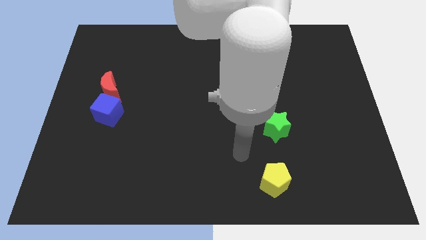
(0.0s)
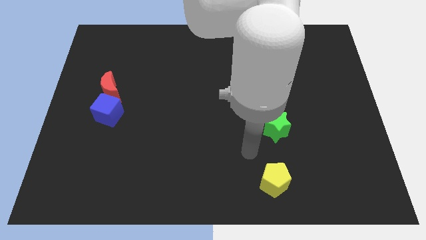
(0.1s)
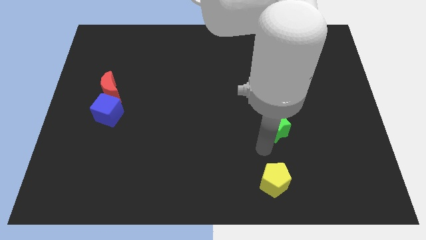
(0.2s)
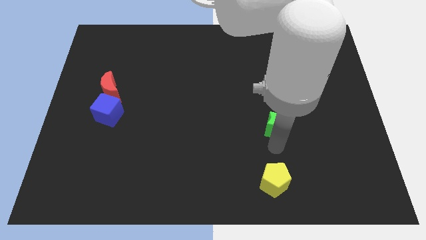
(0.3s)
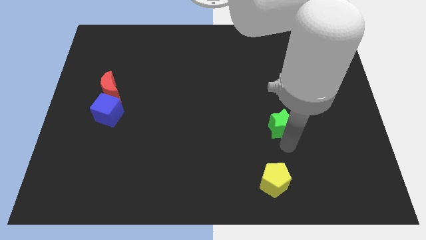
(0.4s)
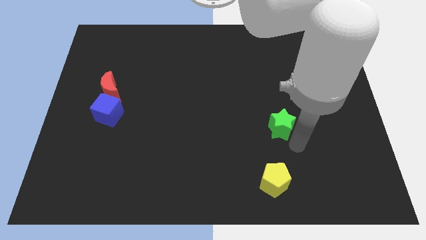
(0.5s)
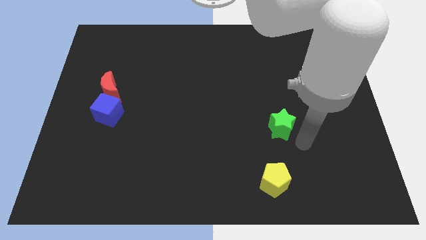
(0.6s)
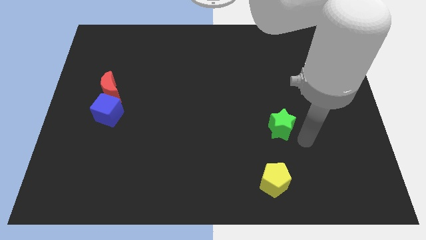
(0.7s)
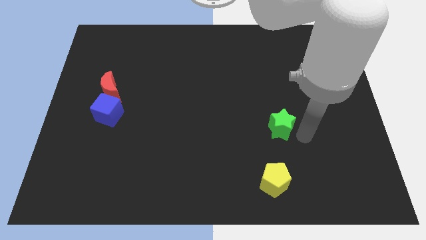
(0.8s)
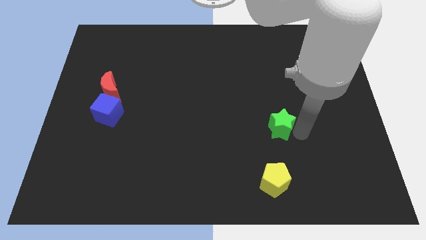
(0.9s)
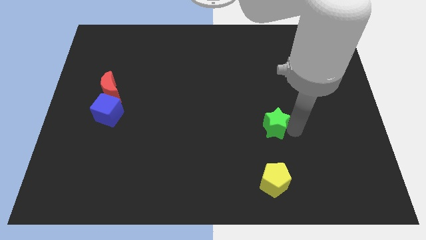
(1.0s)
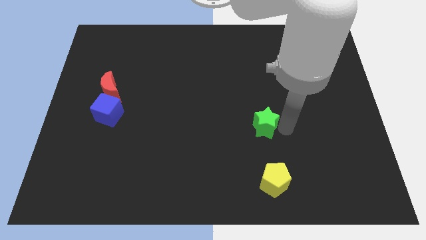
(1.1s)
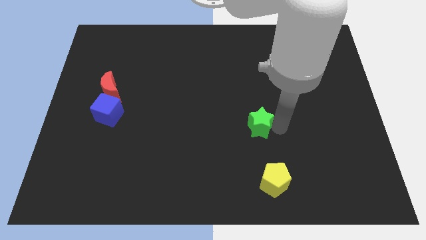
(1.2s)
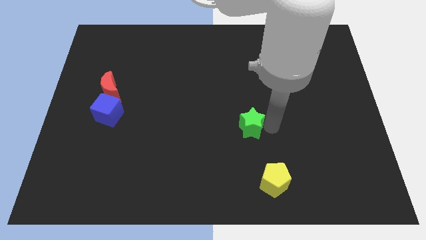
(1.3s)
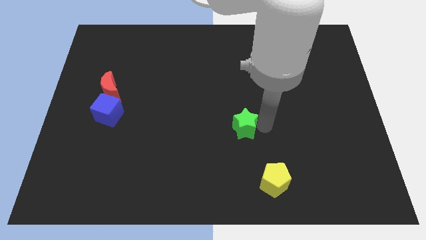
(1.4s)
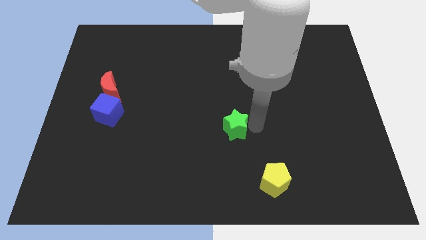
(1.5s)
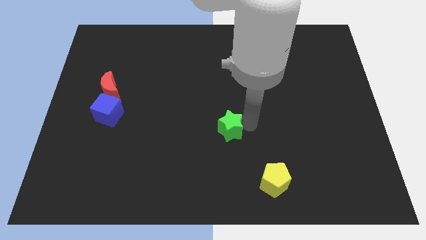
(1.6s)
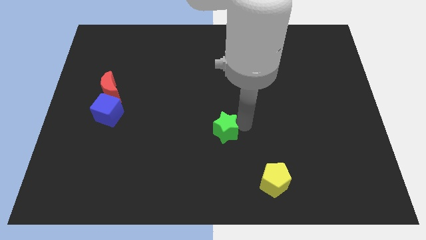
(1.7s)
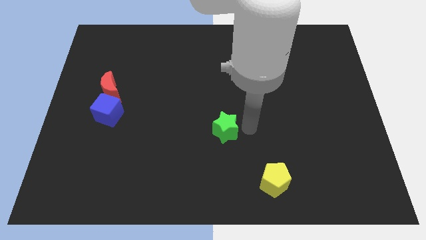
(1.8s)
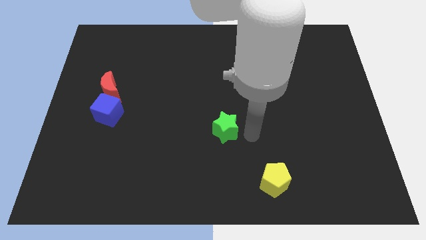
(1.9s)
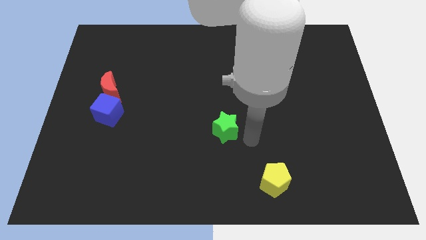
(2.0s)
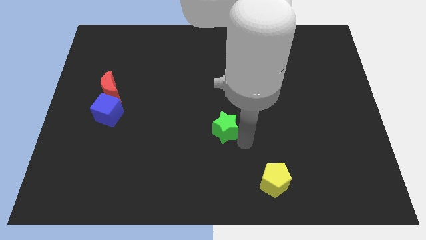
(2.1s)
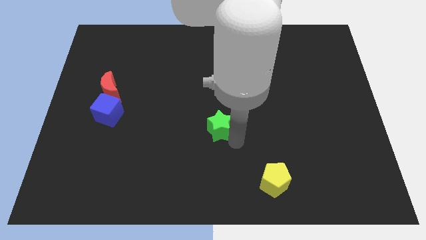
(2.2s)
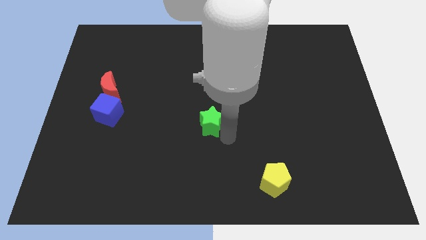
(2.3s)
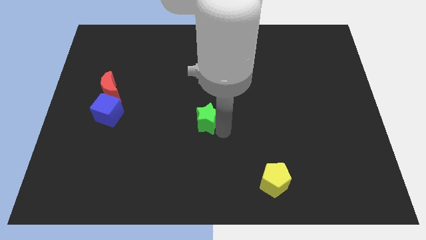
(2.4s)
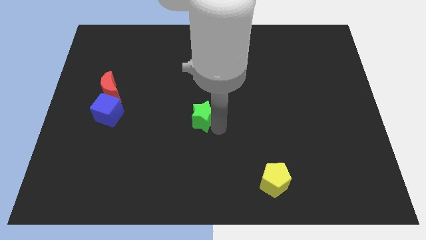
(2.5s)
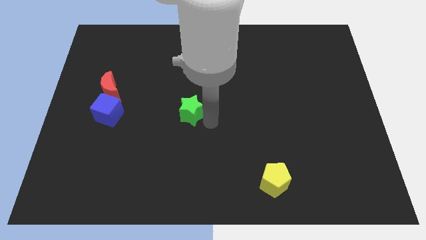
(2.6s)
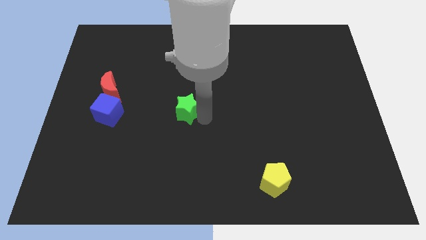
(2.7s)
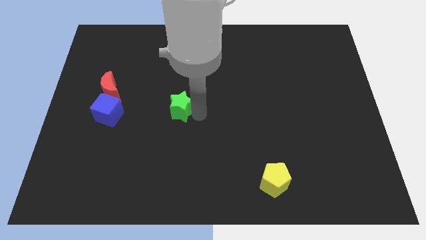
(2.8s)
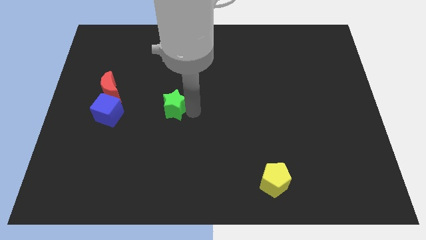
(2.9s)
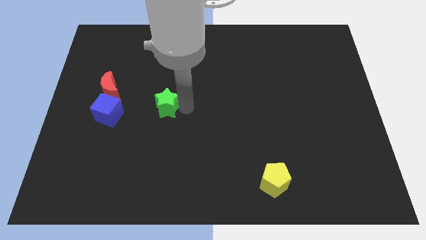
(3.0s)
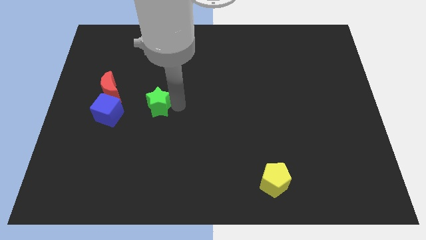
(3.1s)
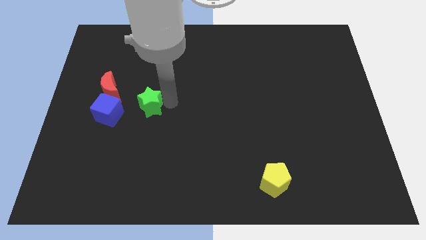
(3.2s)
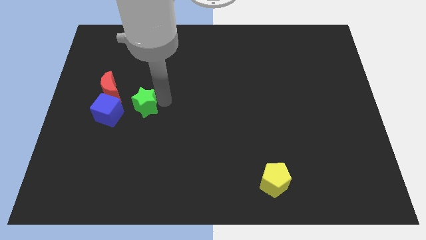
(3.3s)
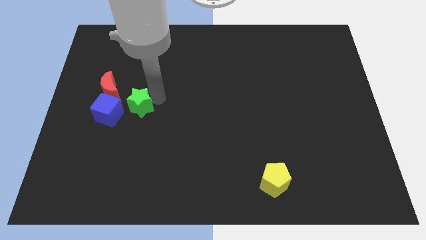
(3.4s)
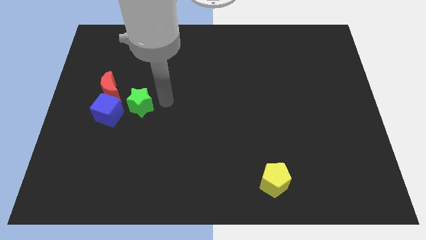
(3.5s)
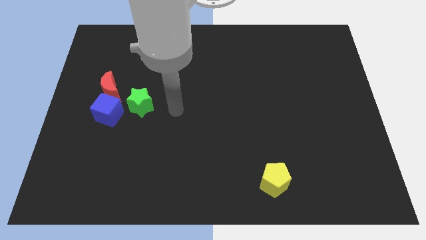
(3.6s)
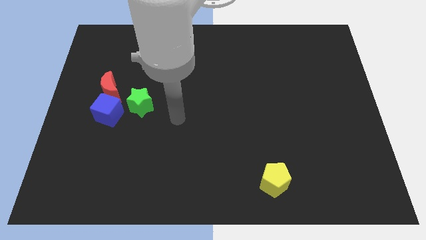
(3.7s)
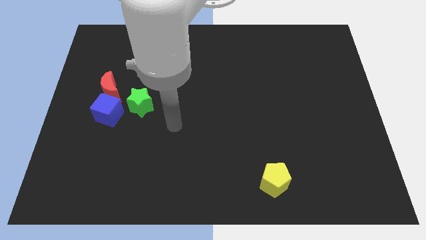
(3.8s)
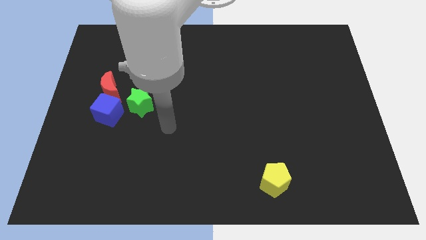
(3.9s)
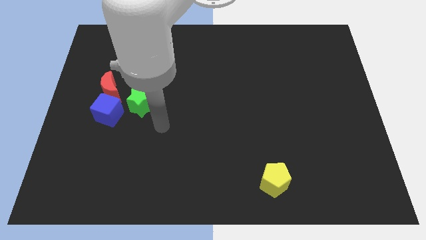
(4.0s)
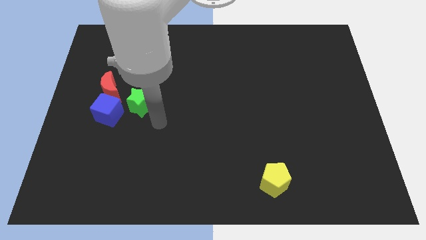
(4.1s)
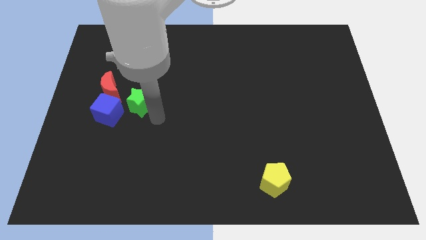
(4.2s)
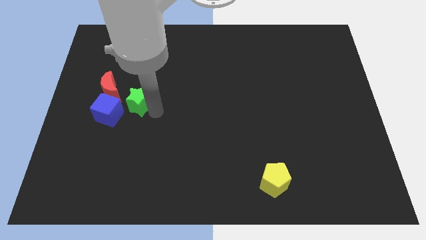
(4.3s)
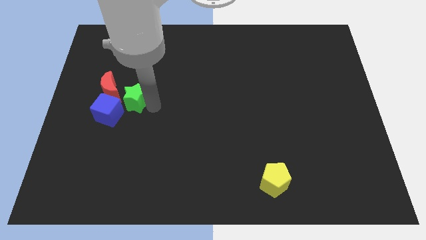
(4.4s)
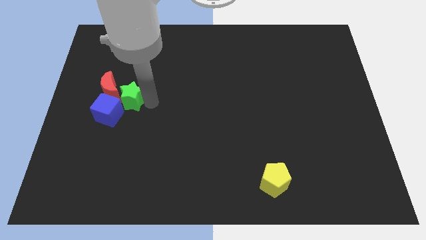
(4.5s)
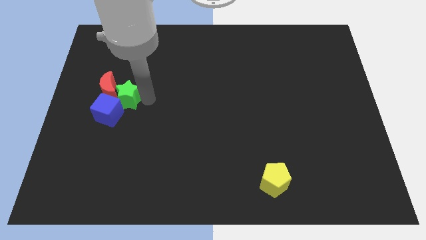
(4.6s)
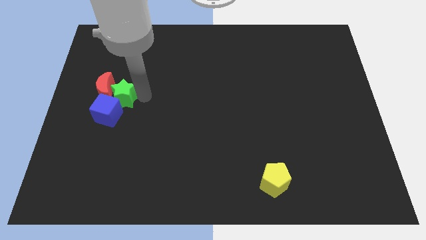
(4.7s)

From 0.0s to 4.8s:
put the green star next to the red block

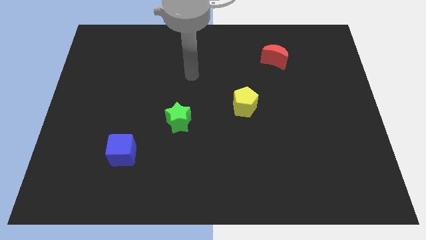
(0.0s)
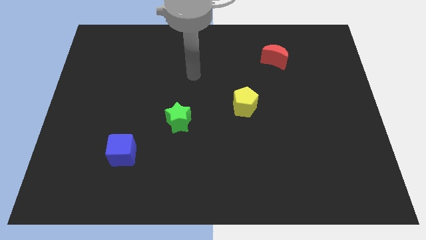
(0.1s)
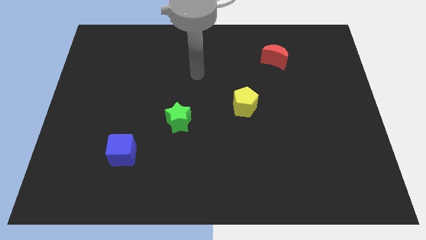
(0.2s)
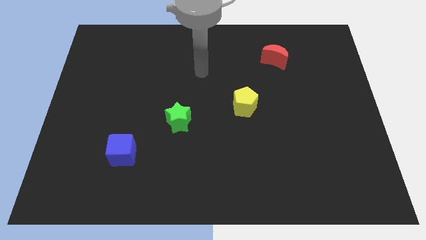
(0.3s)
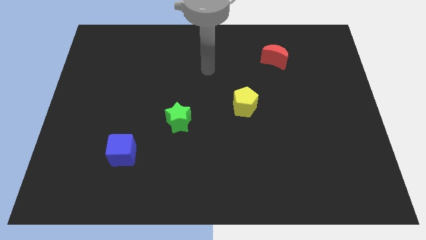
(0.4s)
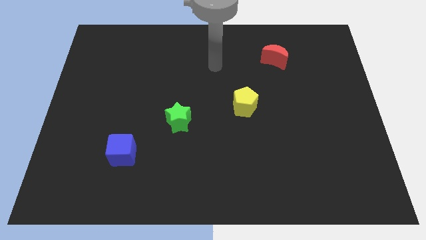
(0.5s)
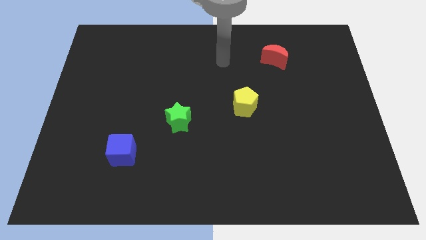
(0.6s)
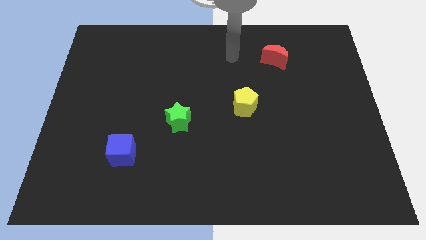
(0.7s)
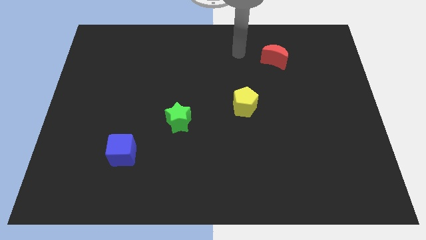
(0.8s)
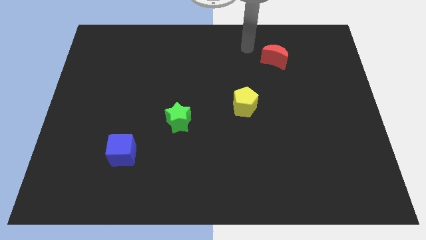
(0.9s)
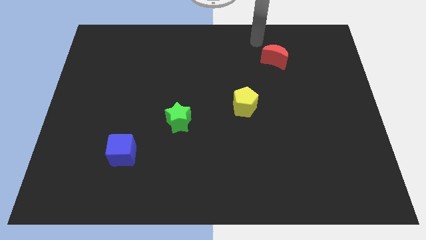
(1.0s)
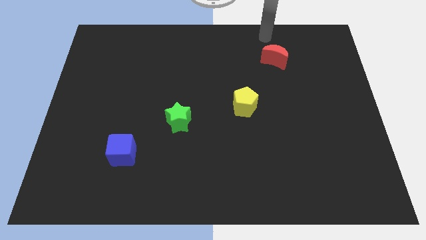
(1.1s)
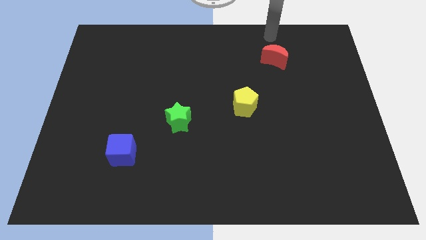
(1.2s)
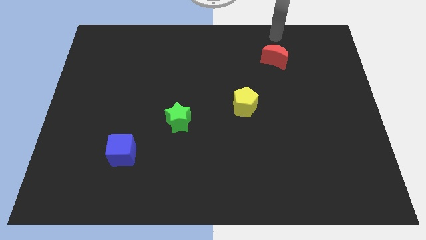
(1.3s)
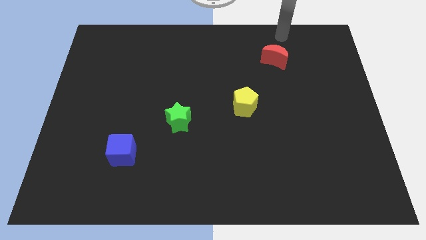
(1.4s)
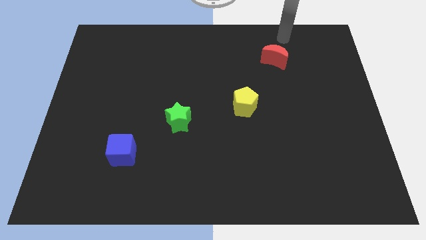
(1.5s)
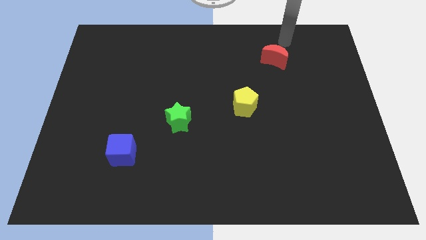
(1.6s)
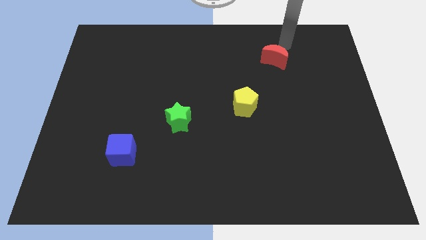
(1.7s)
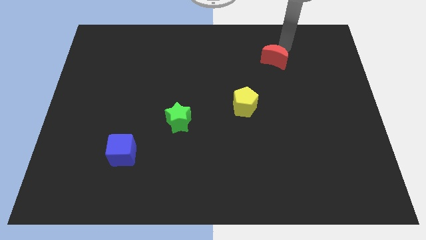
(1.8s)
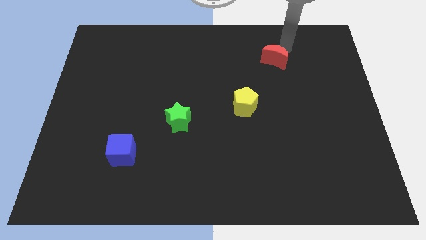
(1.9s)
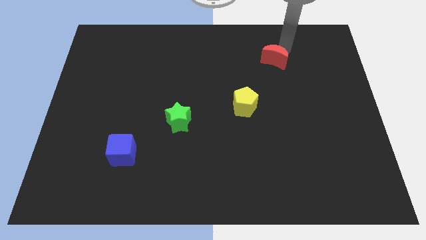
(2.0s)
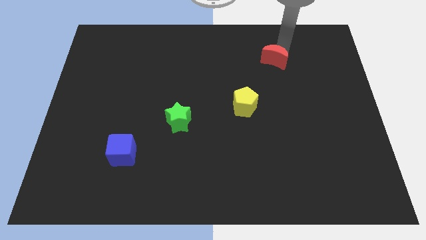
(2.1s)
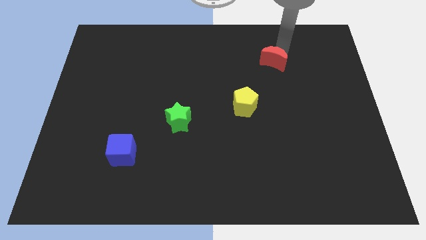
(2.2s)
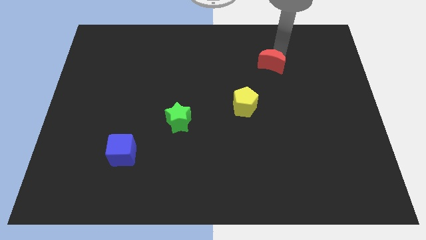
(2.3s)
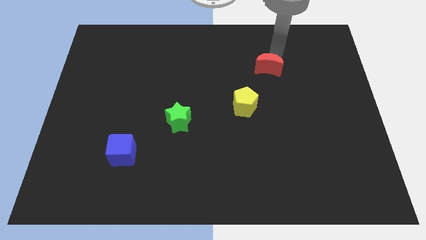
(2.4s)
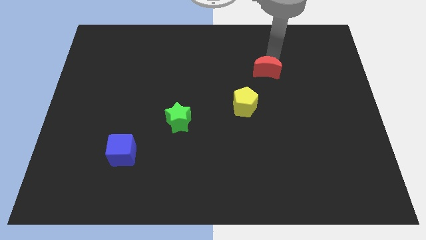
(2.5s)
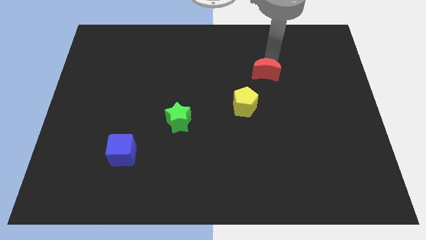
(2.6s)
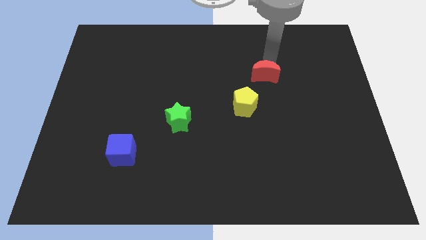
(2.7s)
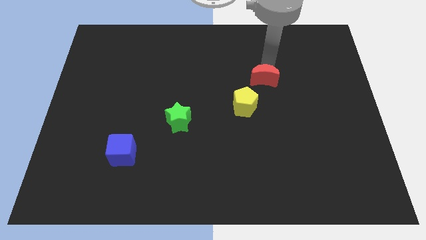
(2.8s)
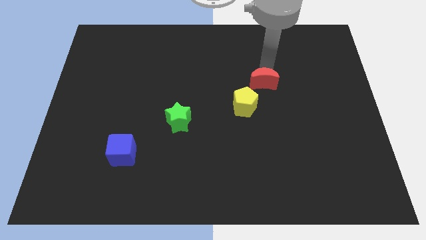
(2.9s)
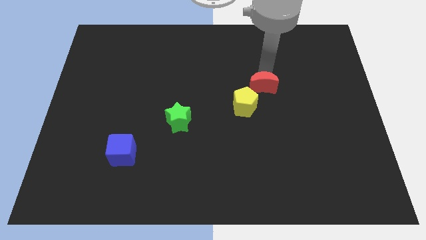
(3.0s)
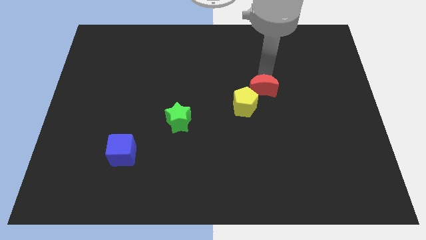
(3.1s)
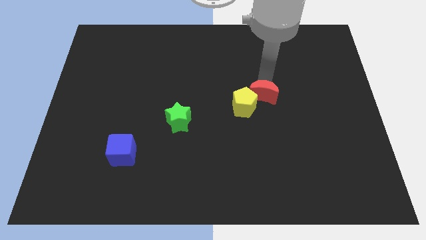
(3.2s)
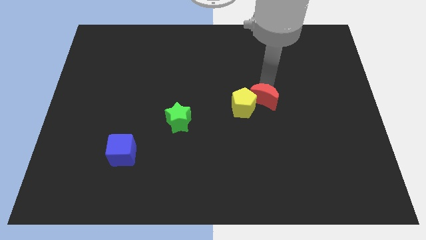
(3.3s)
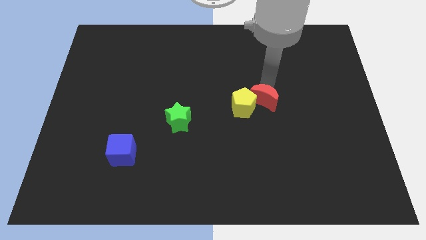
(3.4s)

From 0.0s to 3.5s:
put the moon towards the pentagon

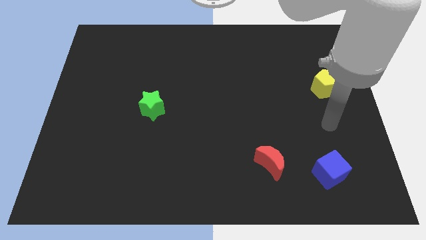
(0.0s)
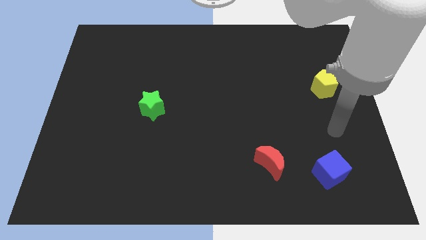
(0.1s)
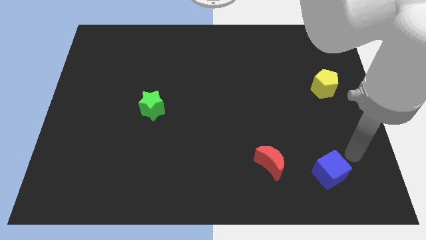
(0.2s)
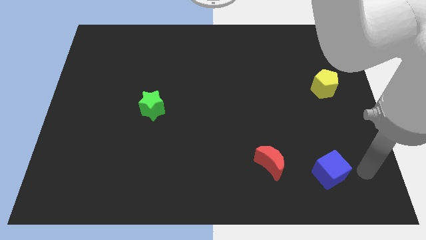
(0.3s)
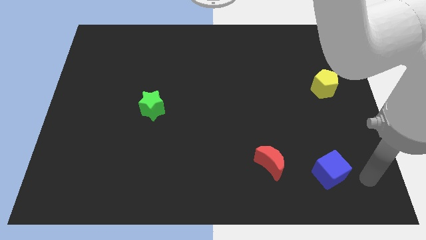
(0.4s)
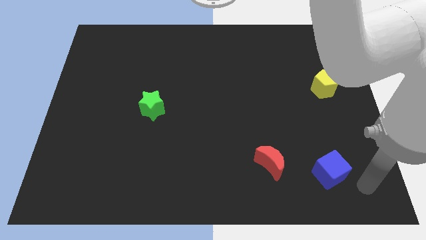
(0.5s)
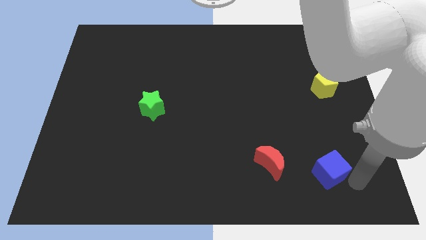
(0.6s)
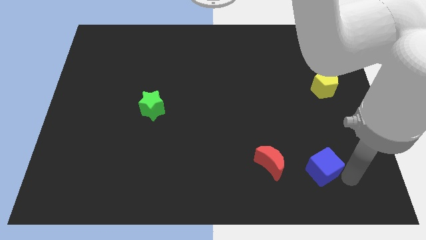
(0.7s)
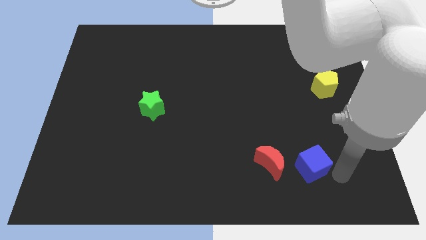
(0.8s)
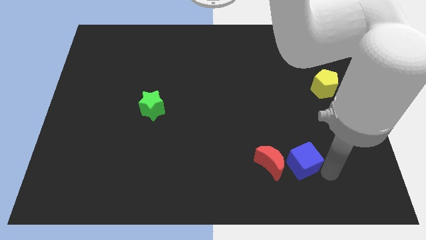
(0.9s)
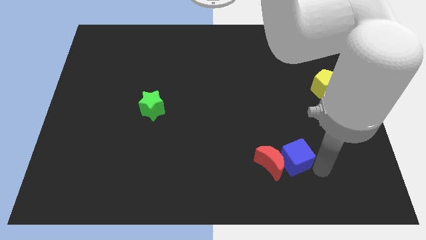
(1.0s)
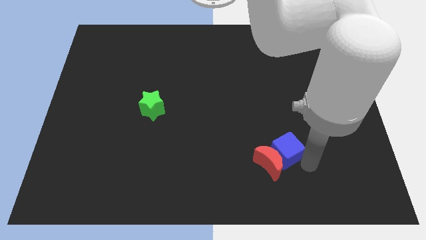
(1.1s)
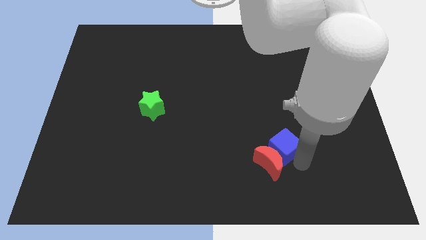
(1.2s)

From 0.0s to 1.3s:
push the cube close to the red block
